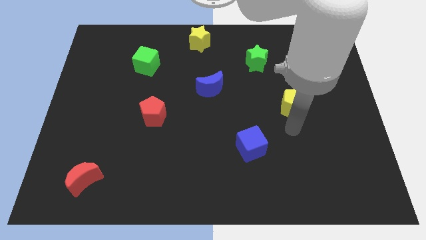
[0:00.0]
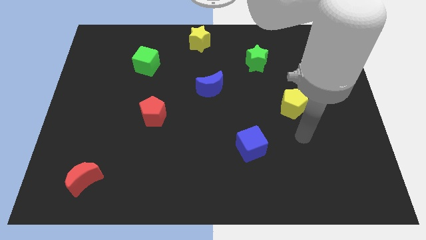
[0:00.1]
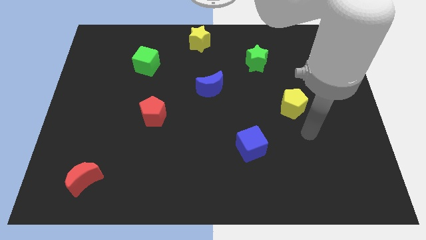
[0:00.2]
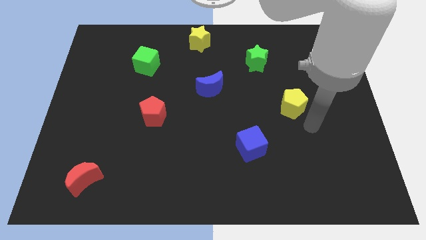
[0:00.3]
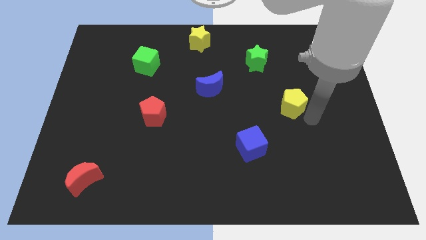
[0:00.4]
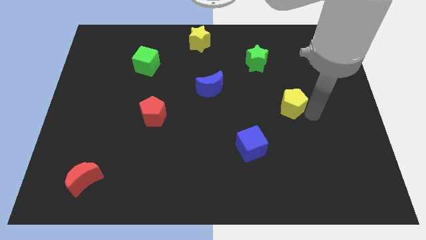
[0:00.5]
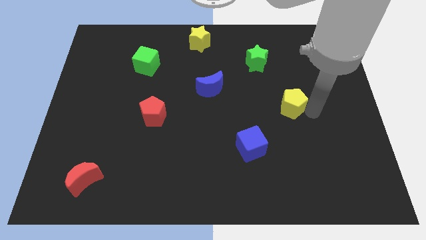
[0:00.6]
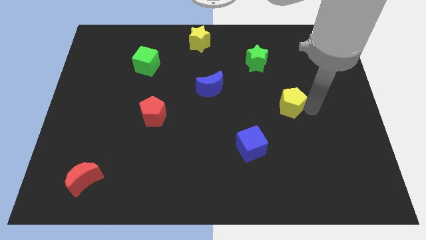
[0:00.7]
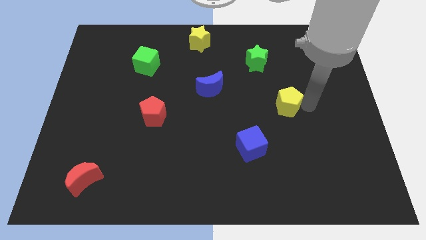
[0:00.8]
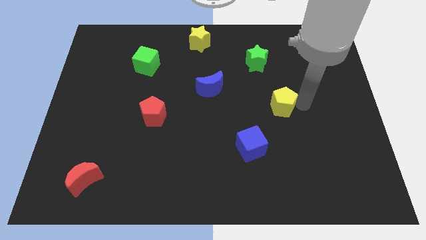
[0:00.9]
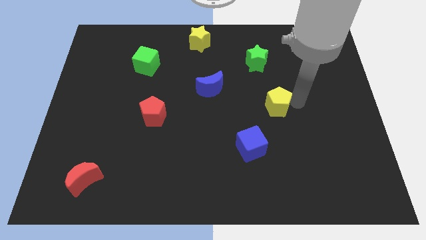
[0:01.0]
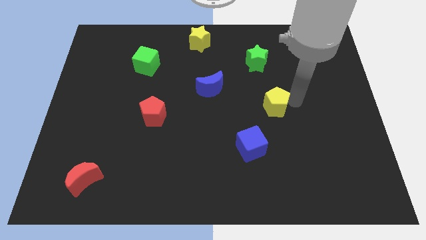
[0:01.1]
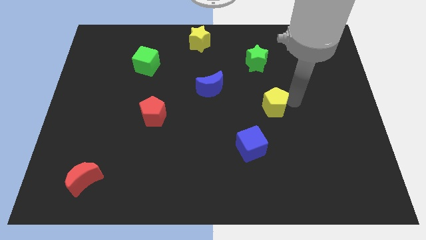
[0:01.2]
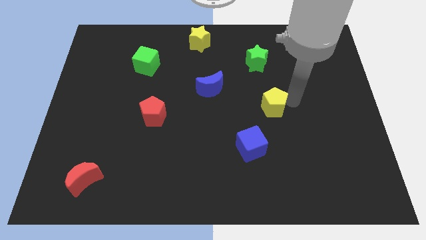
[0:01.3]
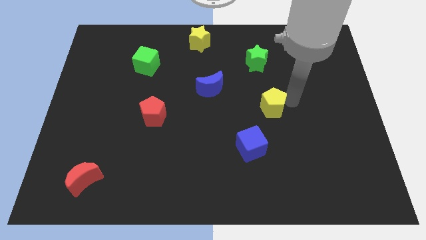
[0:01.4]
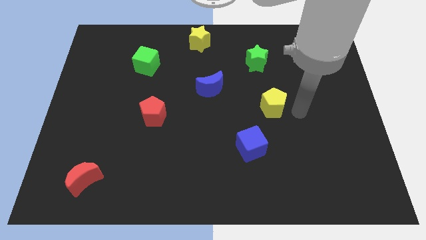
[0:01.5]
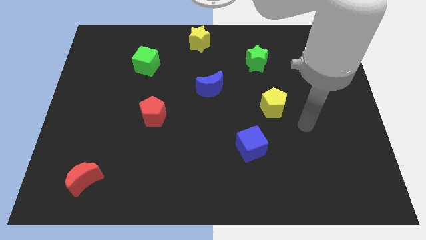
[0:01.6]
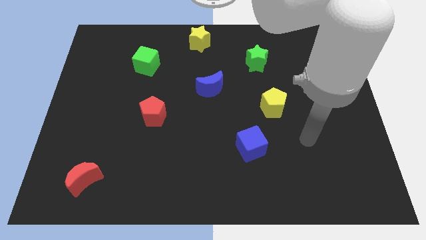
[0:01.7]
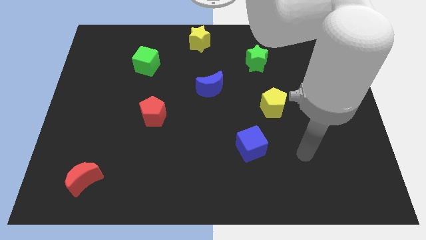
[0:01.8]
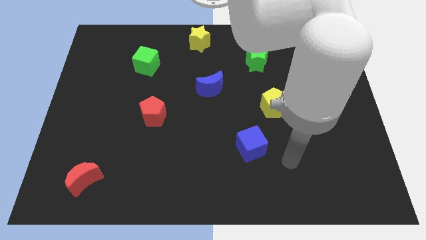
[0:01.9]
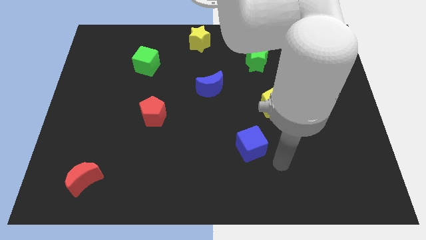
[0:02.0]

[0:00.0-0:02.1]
push yellow pentagon parallel to red pentagon

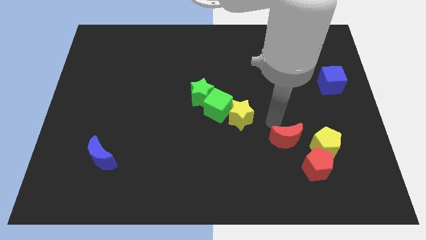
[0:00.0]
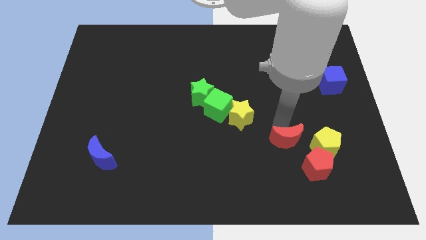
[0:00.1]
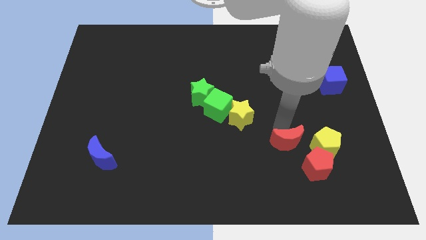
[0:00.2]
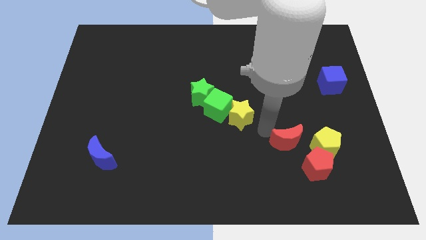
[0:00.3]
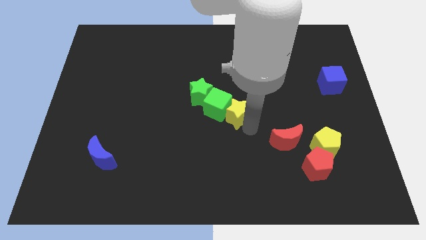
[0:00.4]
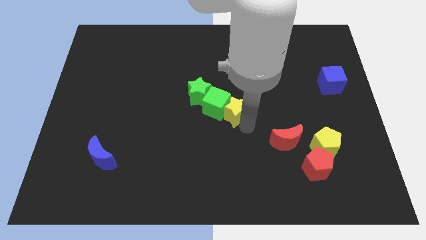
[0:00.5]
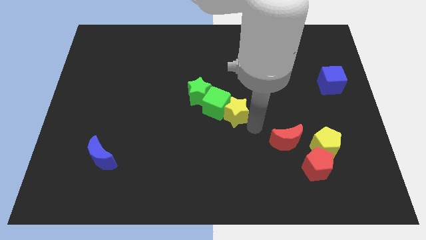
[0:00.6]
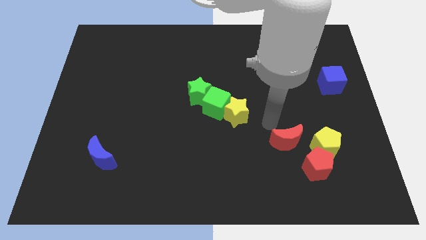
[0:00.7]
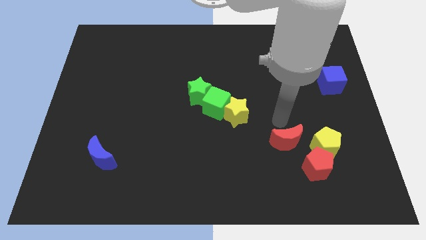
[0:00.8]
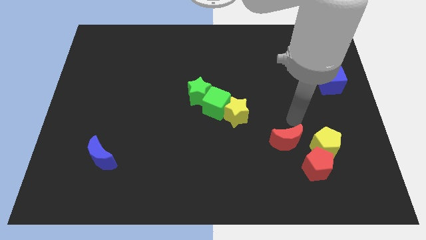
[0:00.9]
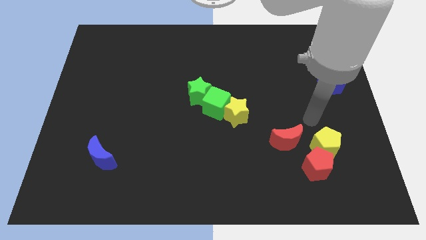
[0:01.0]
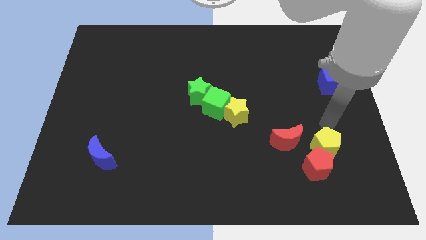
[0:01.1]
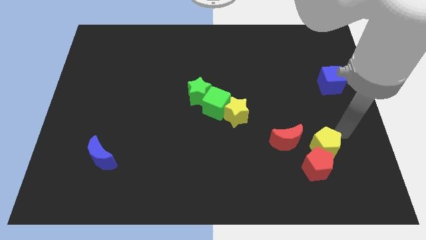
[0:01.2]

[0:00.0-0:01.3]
move the yellow star right side of the green cube

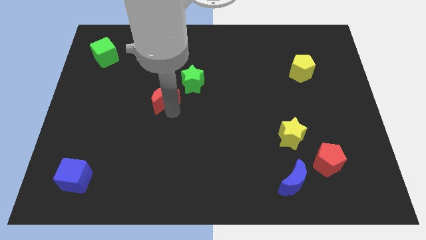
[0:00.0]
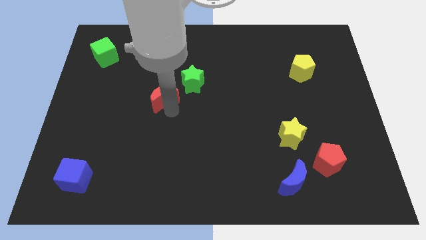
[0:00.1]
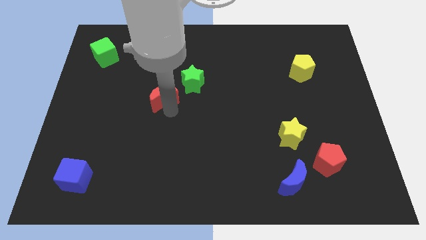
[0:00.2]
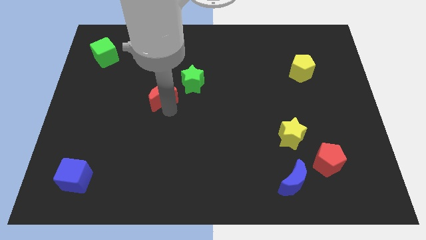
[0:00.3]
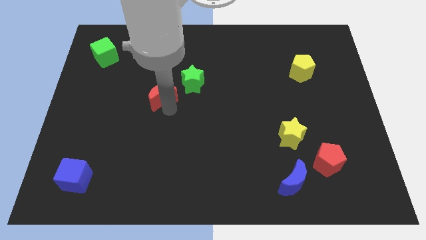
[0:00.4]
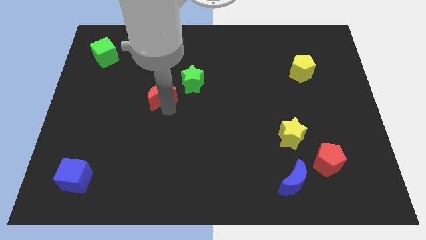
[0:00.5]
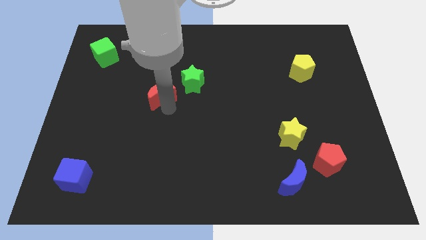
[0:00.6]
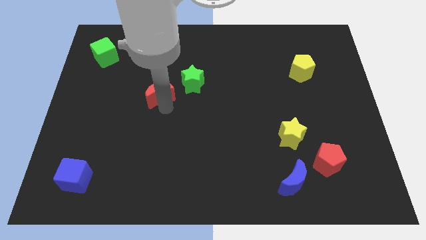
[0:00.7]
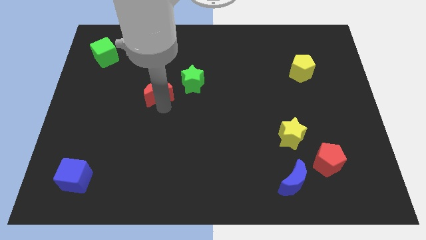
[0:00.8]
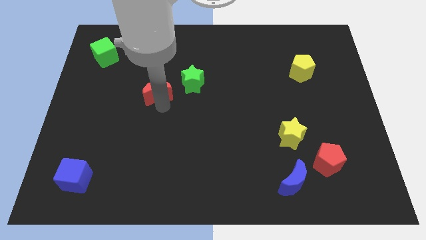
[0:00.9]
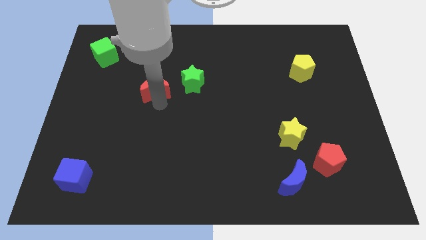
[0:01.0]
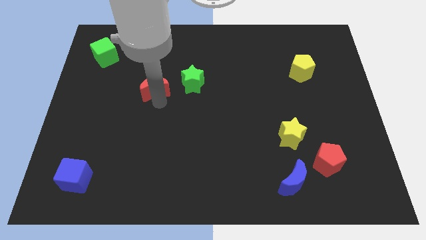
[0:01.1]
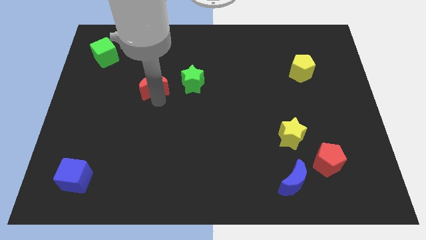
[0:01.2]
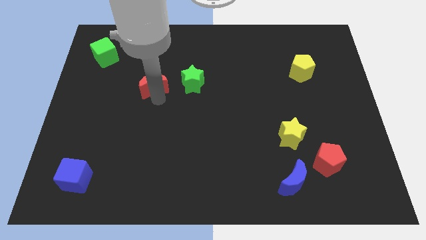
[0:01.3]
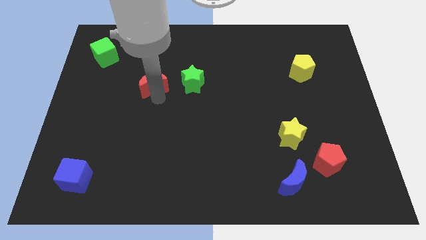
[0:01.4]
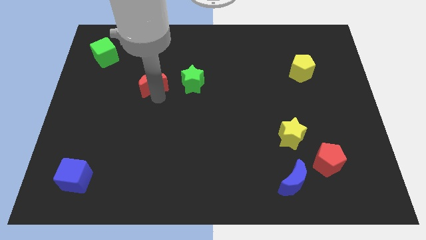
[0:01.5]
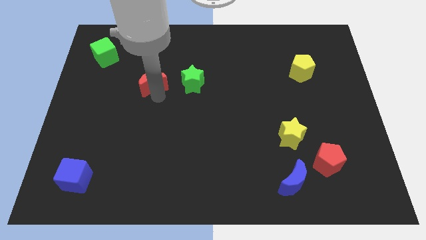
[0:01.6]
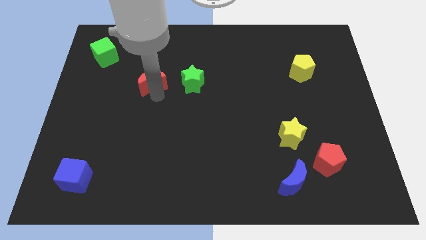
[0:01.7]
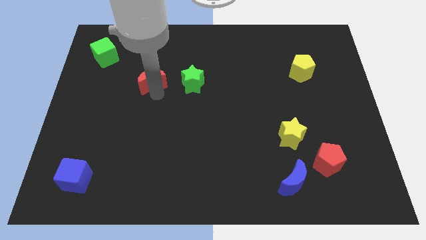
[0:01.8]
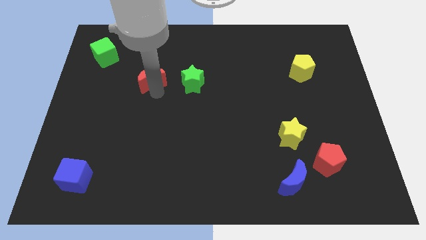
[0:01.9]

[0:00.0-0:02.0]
slide the red moon to the left side of the green star

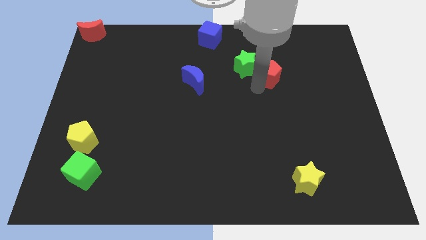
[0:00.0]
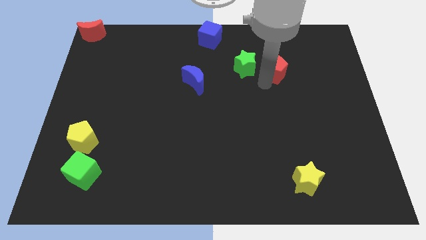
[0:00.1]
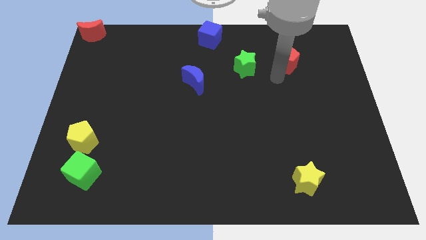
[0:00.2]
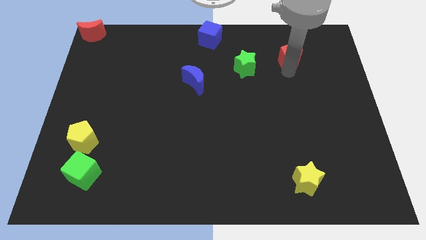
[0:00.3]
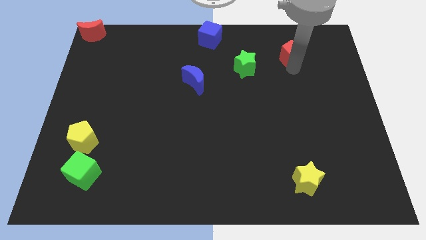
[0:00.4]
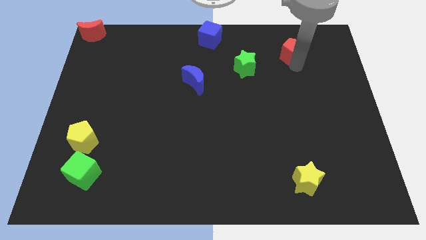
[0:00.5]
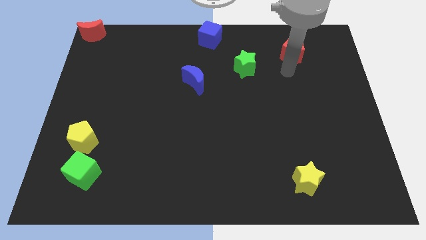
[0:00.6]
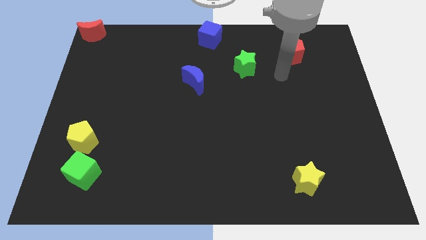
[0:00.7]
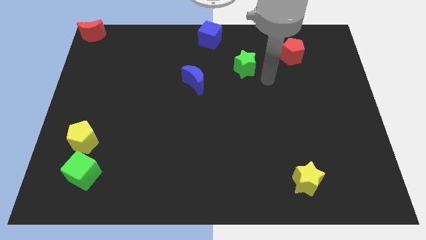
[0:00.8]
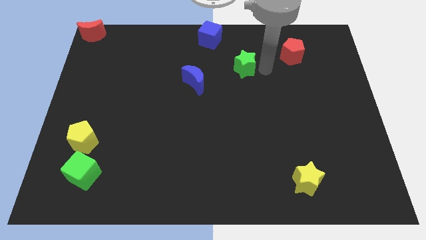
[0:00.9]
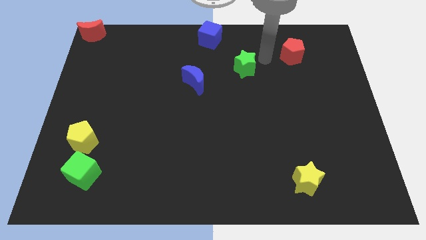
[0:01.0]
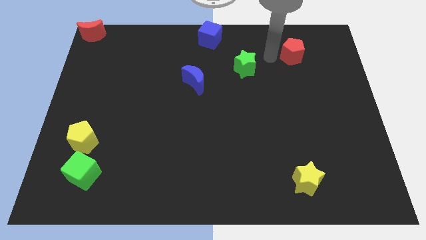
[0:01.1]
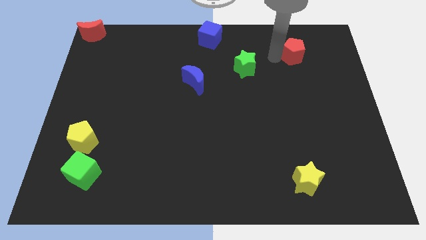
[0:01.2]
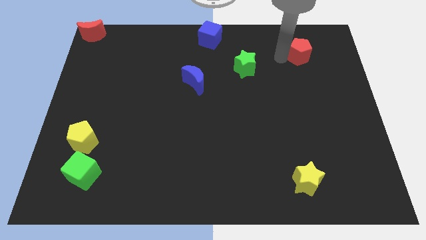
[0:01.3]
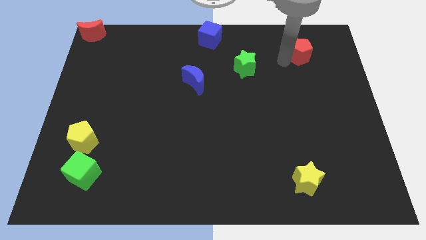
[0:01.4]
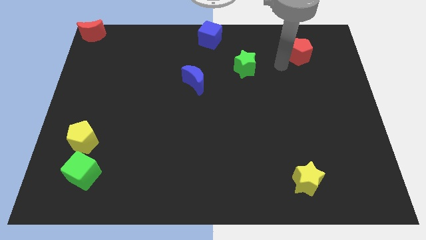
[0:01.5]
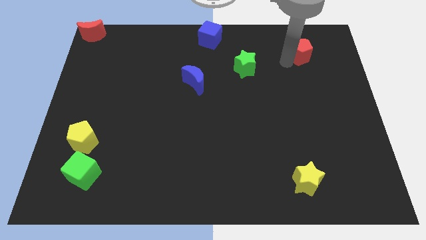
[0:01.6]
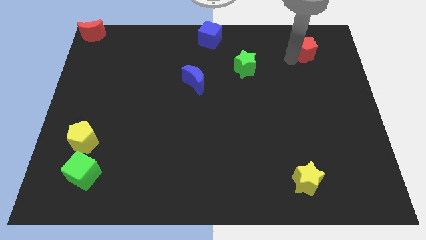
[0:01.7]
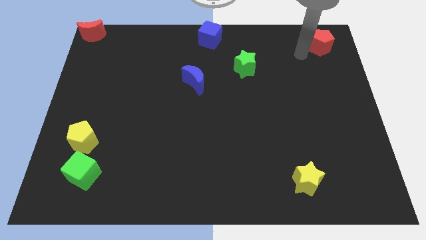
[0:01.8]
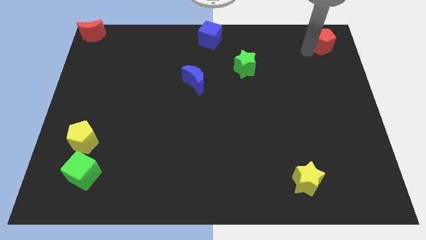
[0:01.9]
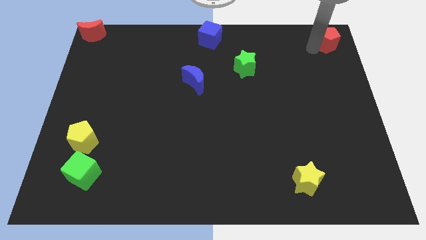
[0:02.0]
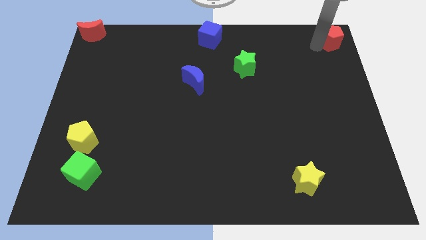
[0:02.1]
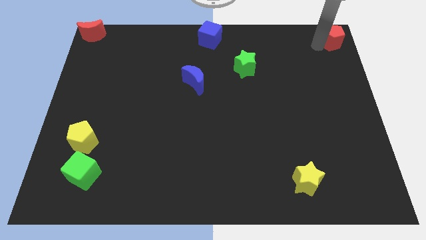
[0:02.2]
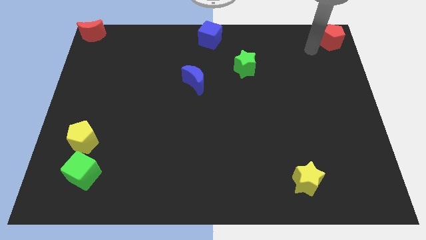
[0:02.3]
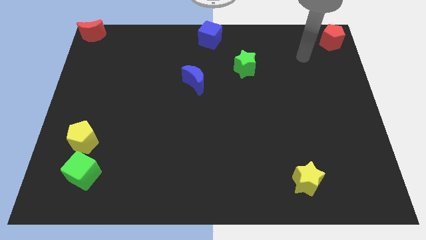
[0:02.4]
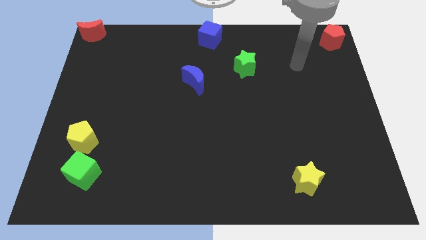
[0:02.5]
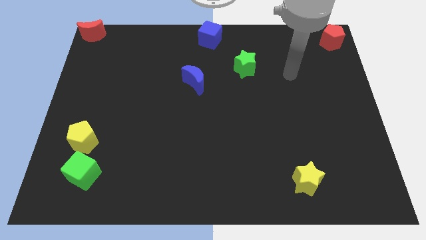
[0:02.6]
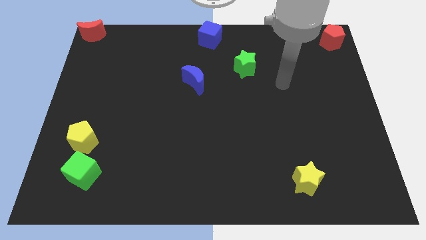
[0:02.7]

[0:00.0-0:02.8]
push red pentagon to the top right corner

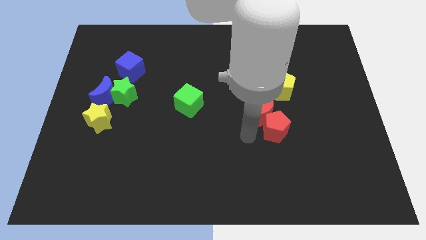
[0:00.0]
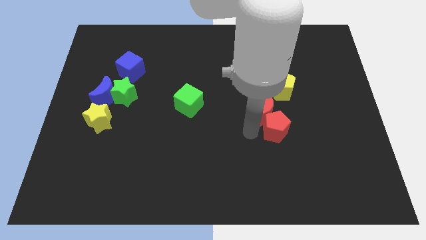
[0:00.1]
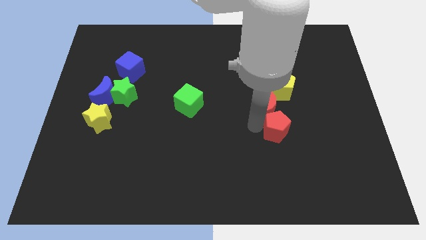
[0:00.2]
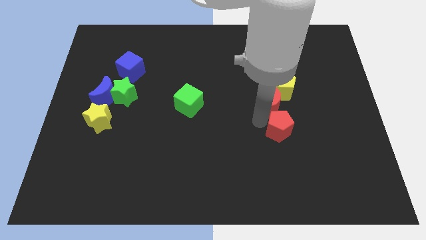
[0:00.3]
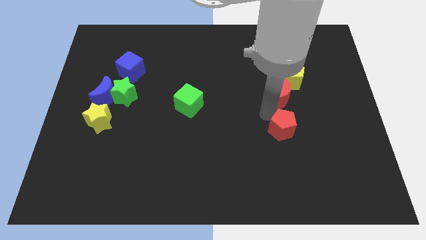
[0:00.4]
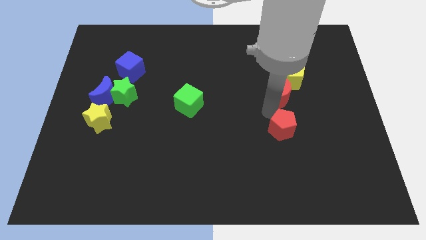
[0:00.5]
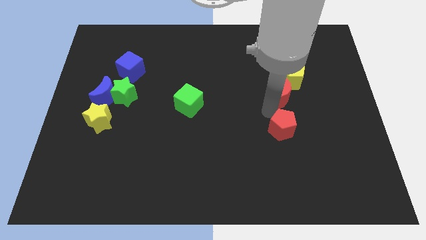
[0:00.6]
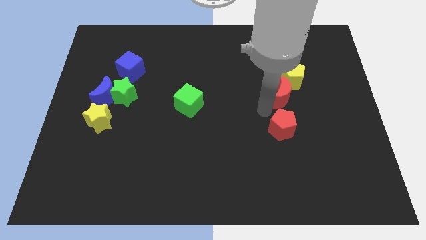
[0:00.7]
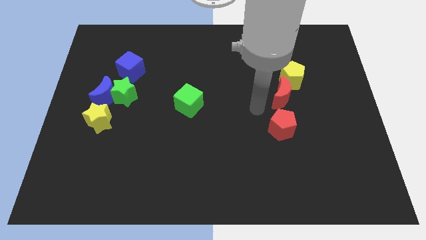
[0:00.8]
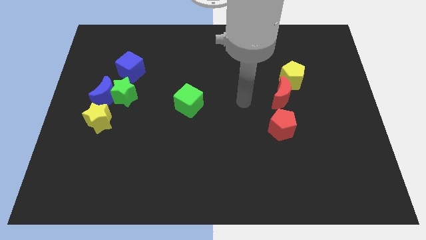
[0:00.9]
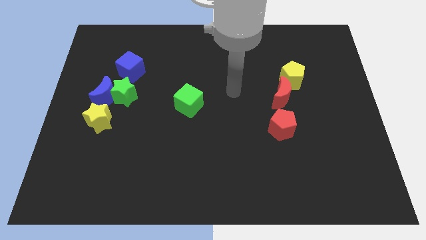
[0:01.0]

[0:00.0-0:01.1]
push red moon in between yellow and red pentagons
